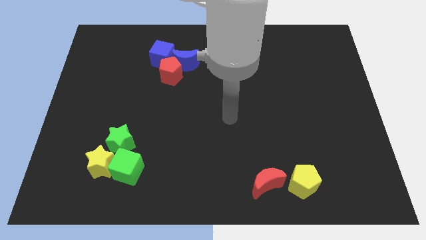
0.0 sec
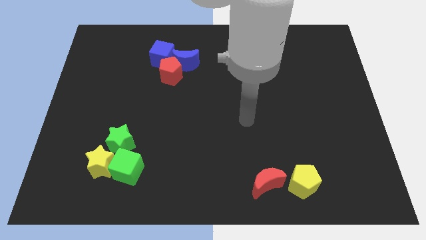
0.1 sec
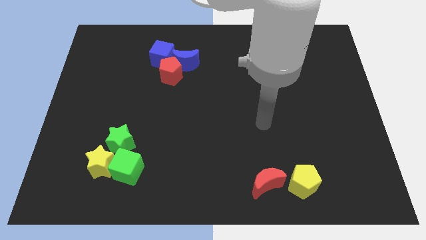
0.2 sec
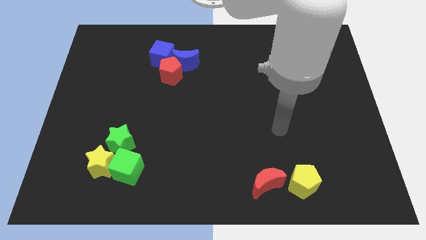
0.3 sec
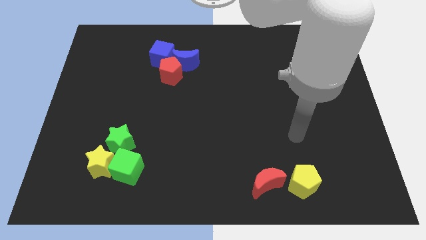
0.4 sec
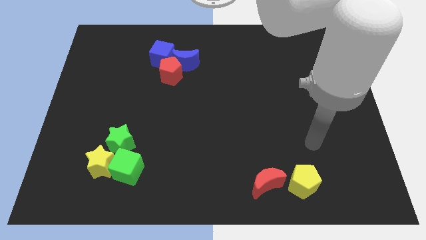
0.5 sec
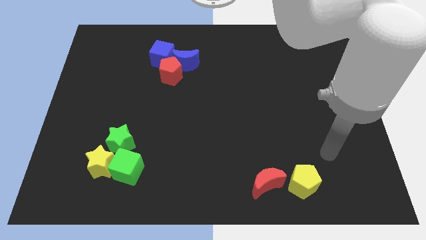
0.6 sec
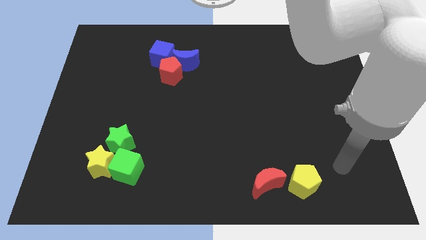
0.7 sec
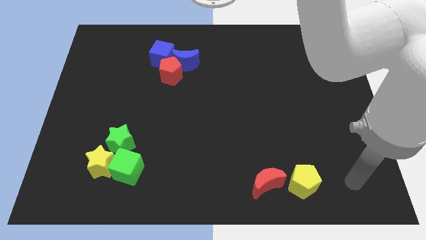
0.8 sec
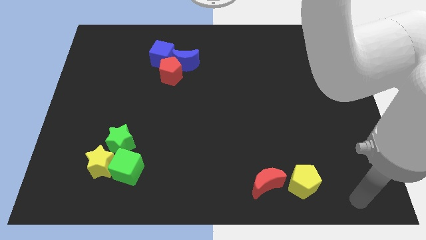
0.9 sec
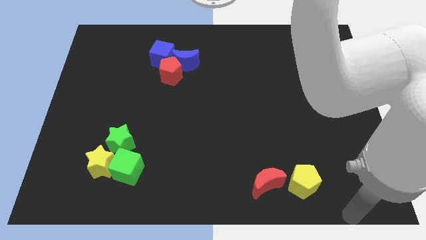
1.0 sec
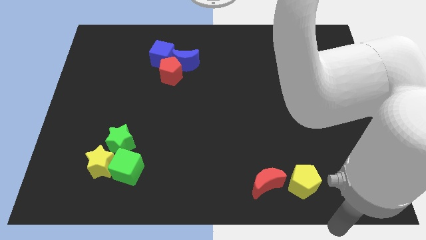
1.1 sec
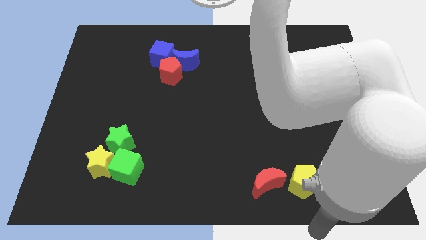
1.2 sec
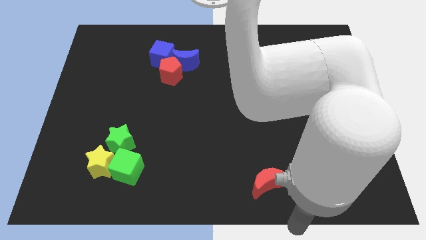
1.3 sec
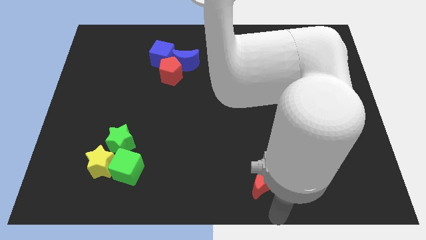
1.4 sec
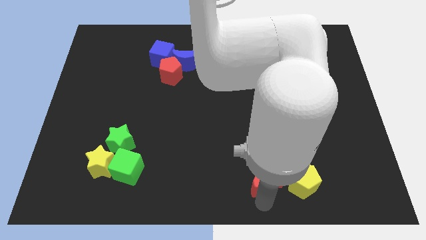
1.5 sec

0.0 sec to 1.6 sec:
drag your arm towards the red moon

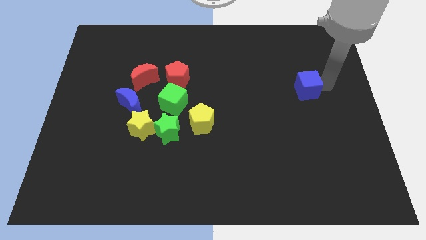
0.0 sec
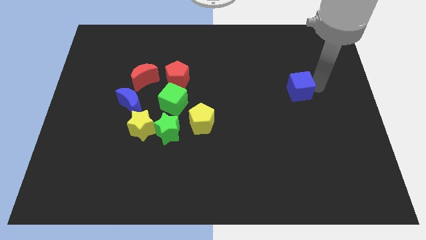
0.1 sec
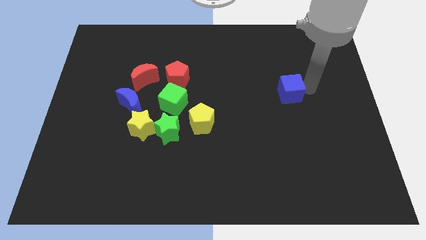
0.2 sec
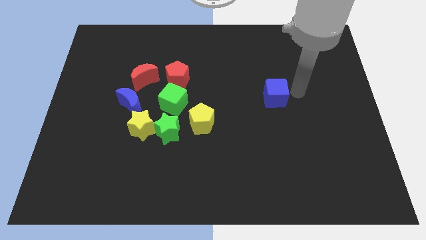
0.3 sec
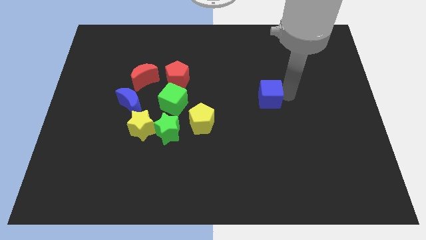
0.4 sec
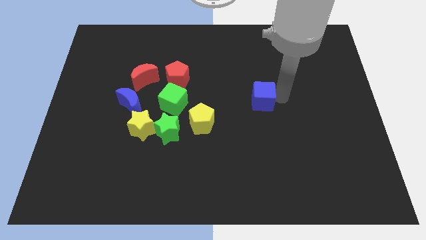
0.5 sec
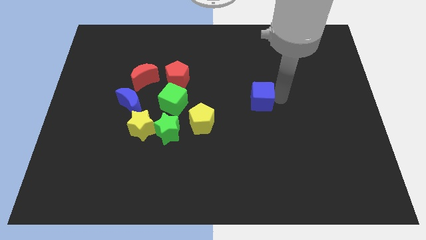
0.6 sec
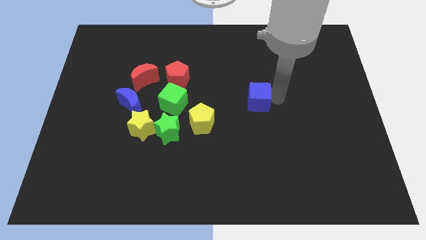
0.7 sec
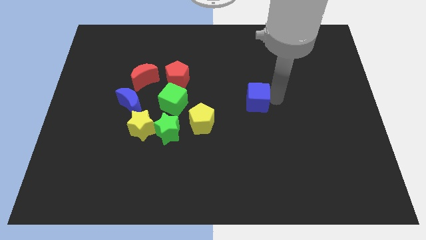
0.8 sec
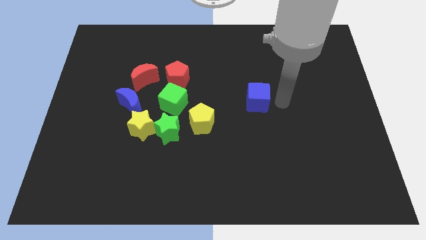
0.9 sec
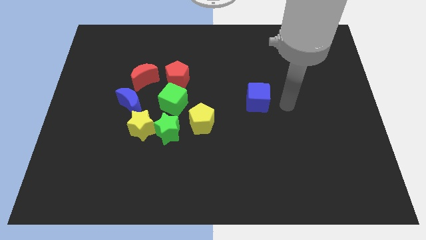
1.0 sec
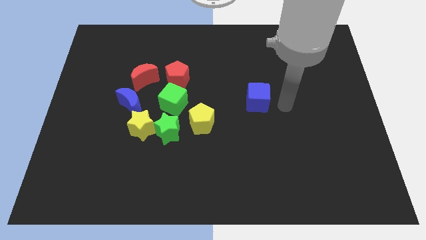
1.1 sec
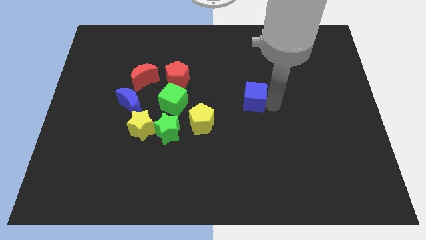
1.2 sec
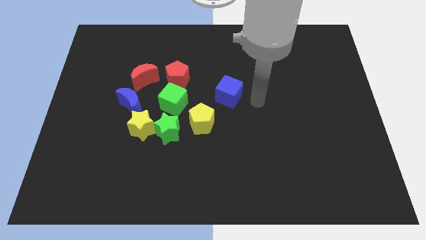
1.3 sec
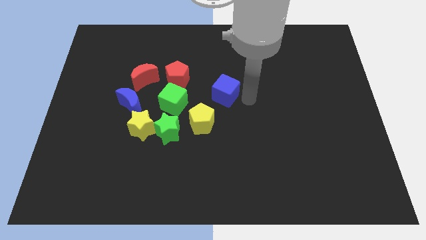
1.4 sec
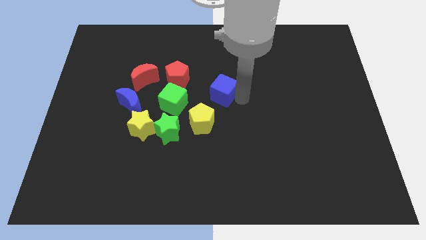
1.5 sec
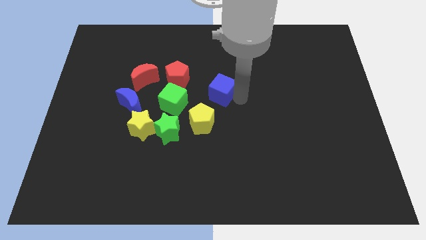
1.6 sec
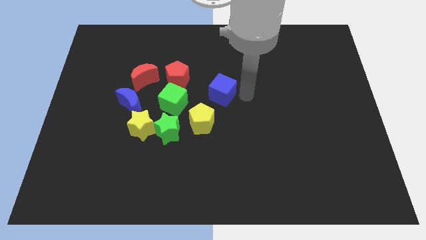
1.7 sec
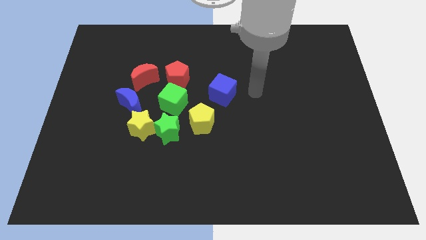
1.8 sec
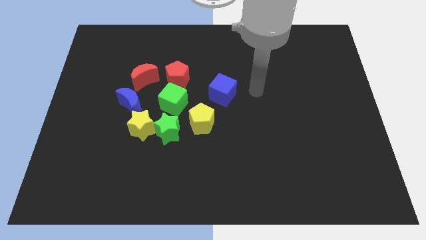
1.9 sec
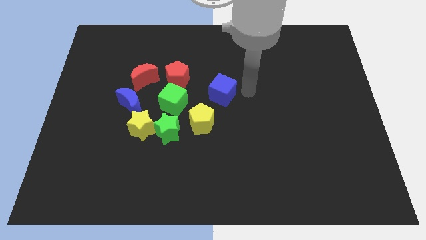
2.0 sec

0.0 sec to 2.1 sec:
place the blue cube diagonally top right to yellow pentagon

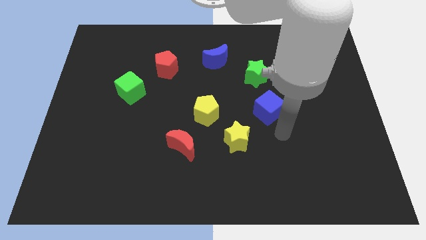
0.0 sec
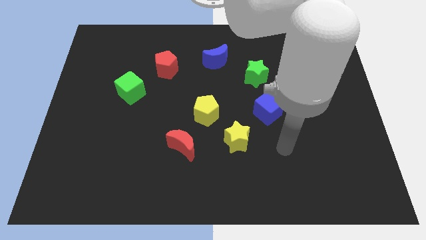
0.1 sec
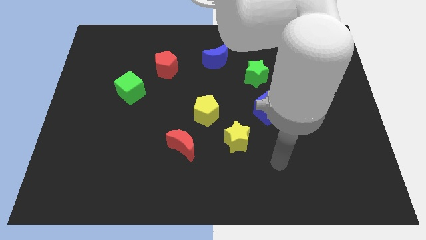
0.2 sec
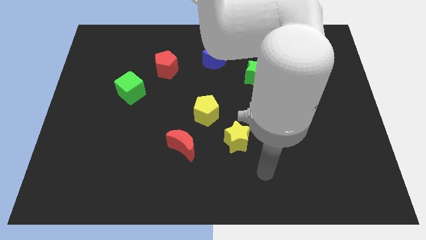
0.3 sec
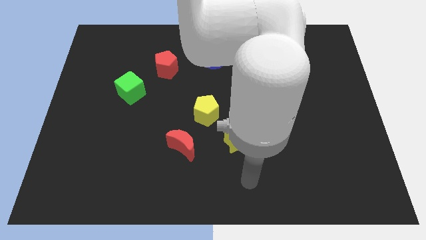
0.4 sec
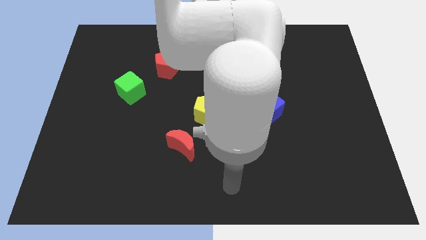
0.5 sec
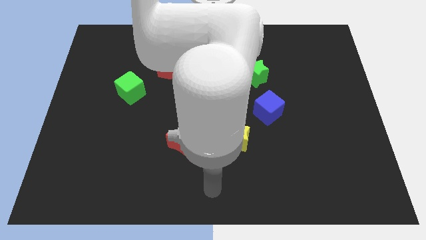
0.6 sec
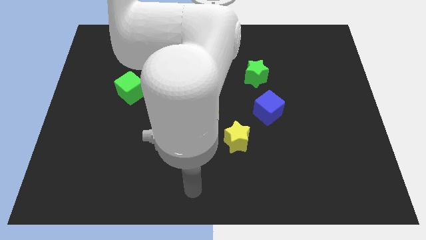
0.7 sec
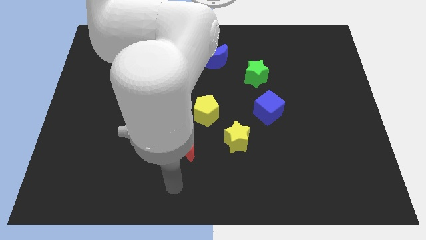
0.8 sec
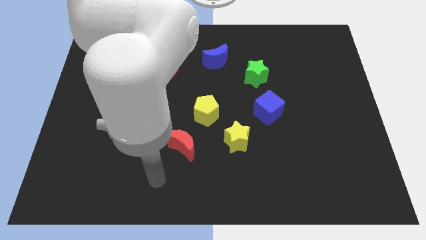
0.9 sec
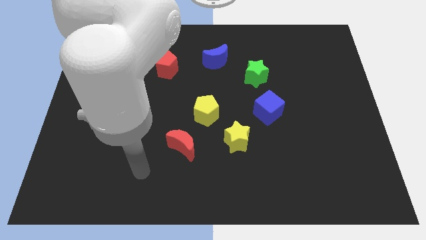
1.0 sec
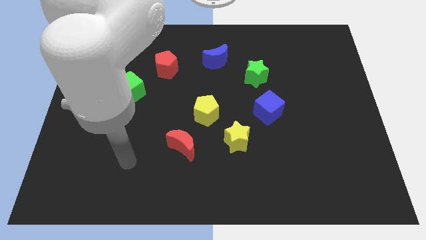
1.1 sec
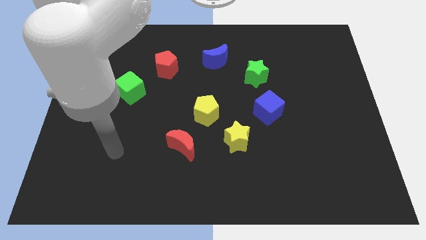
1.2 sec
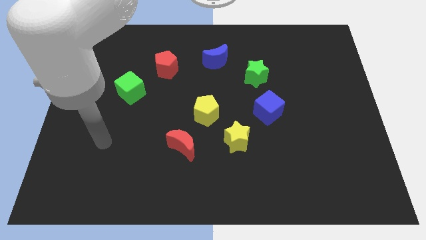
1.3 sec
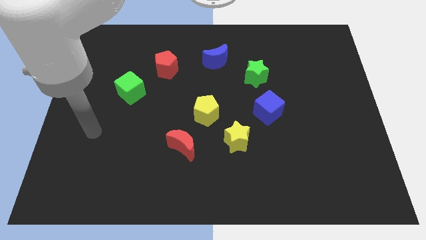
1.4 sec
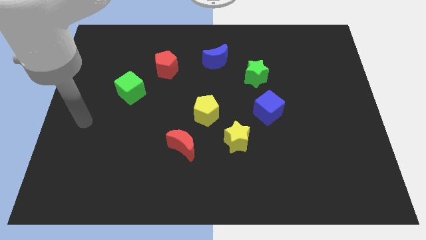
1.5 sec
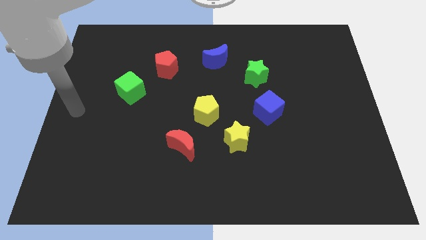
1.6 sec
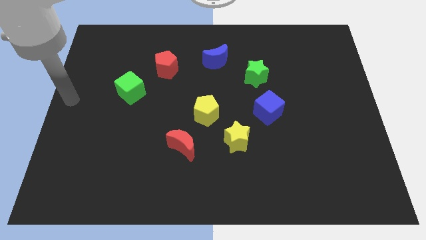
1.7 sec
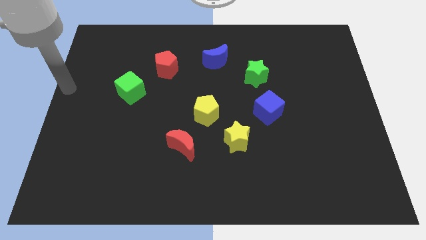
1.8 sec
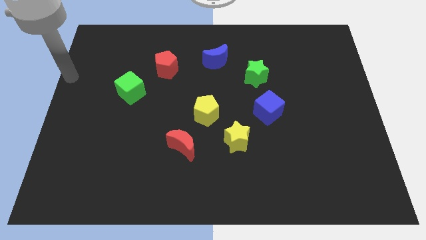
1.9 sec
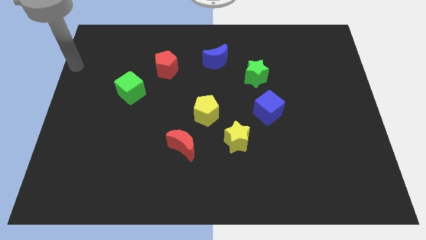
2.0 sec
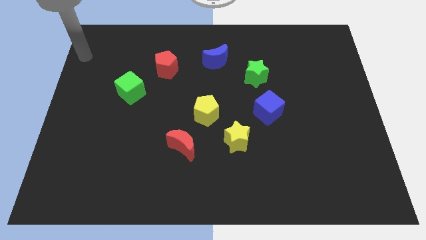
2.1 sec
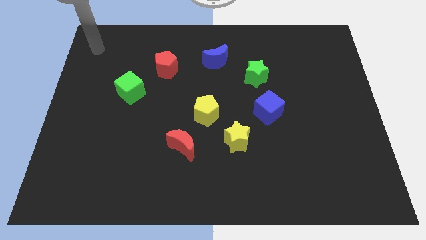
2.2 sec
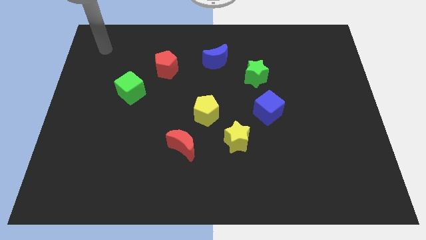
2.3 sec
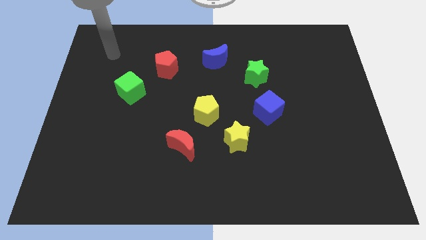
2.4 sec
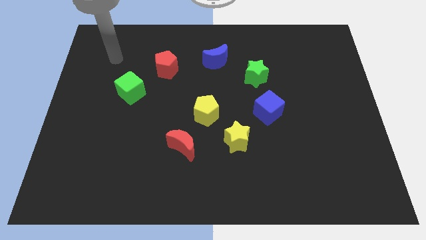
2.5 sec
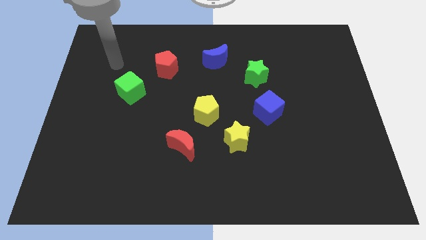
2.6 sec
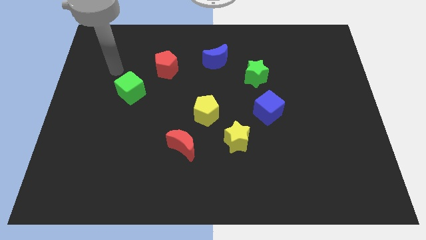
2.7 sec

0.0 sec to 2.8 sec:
point your arm at the top of the green cube

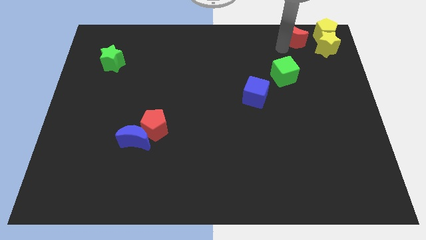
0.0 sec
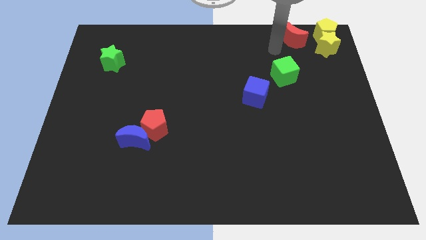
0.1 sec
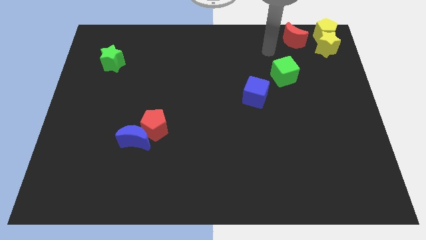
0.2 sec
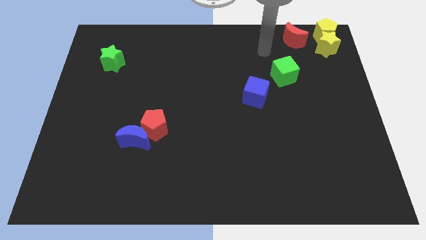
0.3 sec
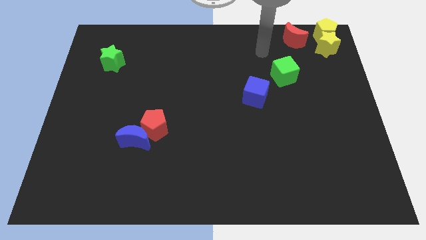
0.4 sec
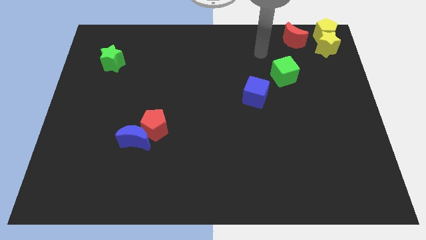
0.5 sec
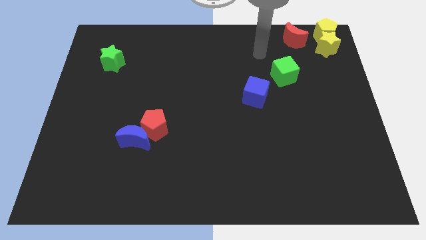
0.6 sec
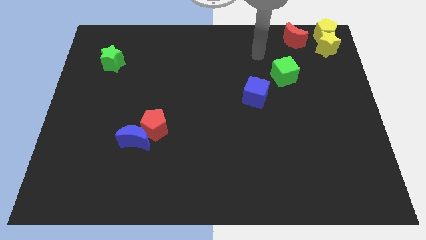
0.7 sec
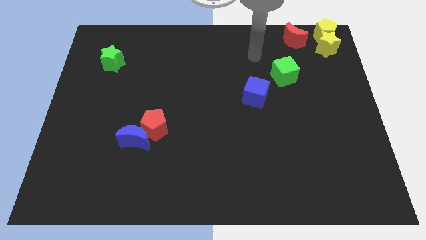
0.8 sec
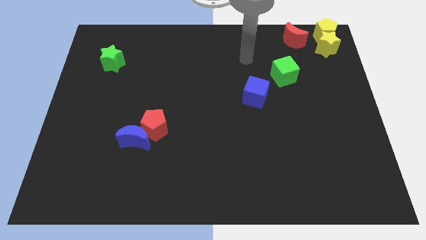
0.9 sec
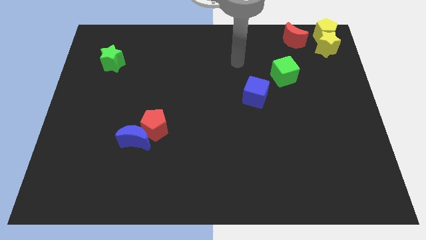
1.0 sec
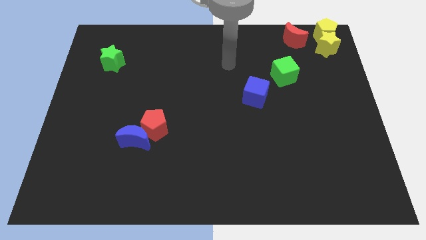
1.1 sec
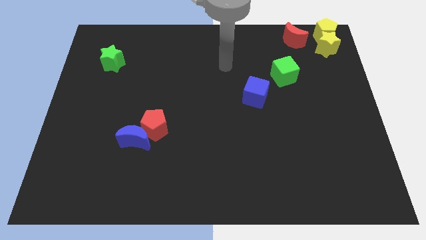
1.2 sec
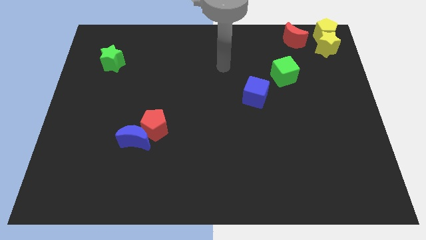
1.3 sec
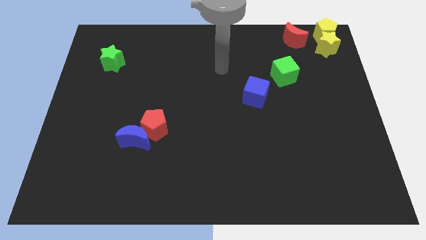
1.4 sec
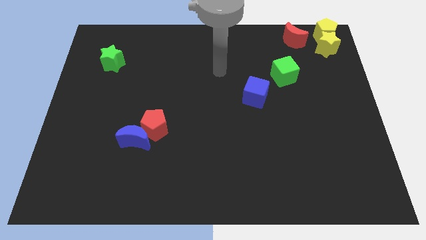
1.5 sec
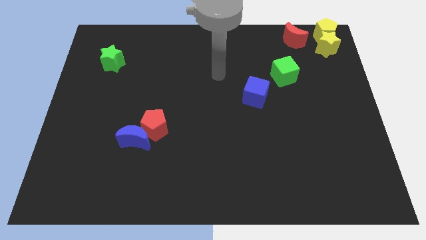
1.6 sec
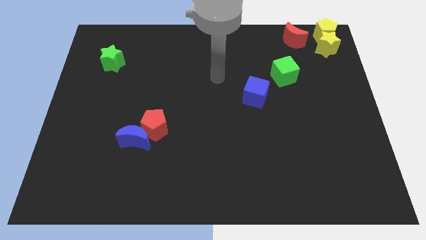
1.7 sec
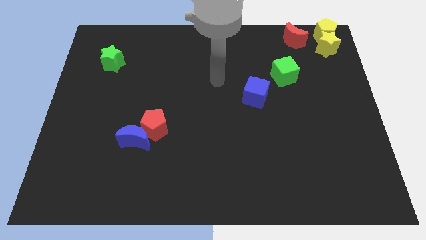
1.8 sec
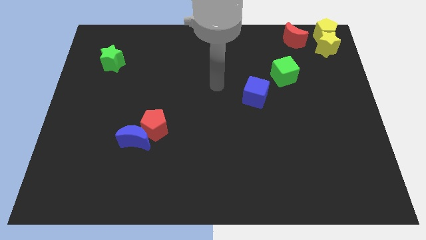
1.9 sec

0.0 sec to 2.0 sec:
move your hand away from the red crescent

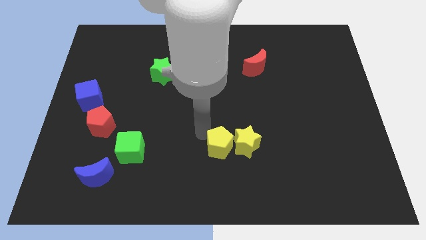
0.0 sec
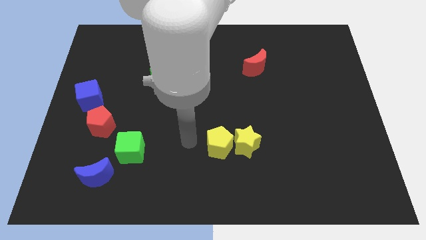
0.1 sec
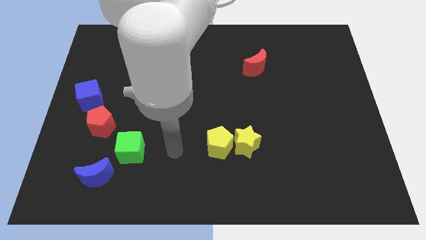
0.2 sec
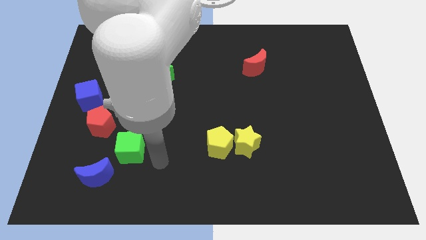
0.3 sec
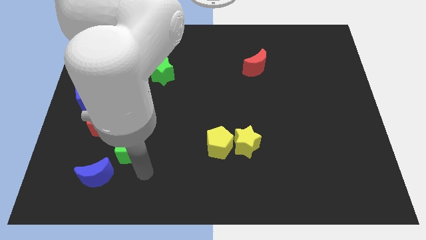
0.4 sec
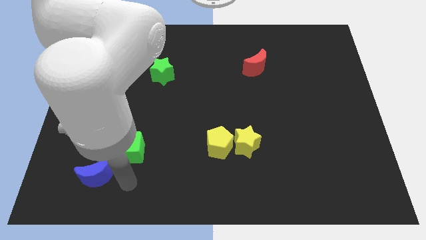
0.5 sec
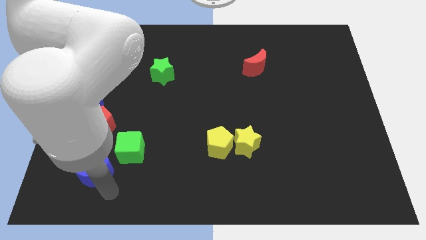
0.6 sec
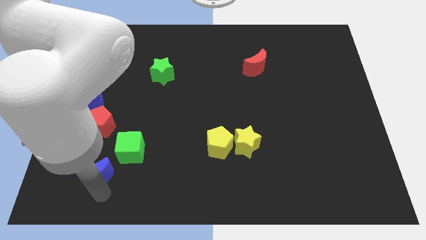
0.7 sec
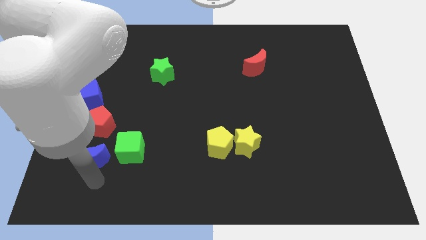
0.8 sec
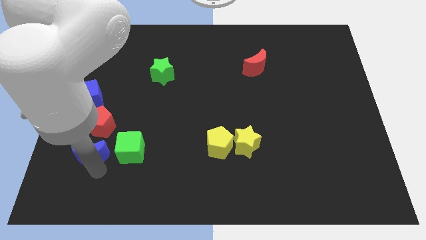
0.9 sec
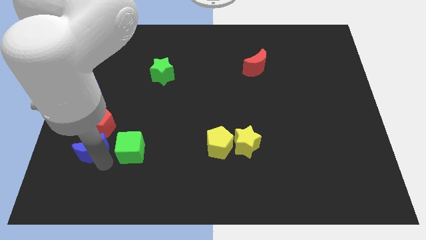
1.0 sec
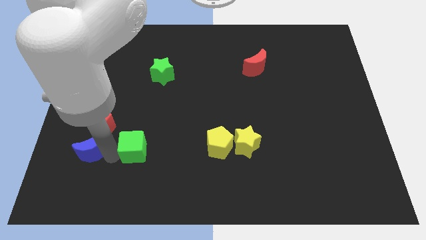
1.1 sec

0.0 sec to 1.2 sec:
push the blue moon upwards slightly
